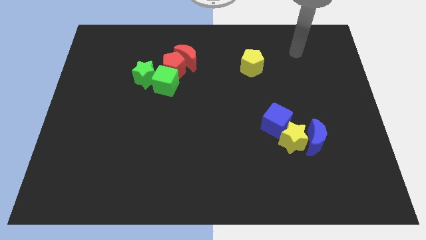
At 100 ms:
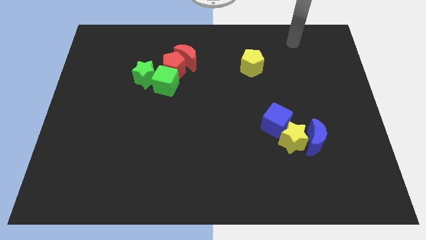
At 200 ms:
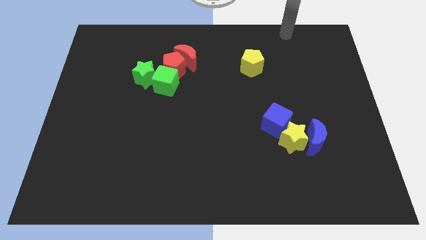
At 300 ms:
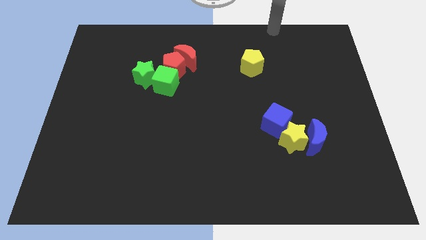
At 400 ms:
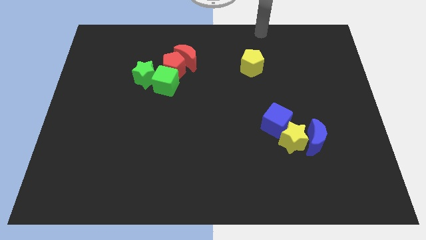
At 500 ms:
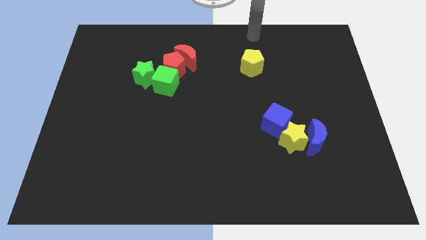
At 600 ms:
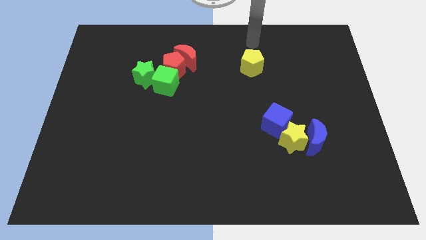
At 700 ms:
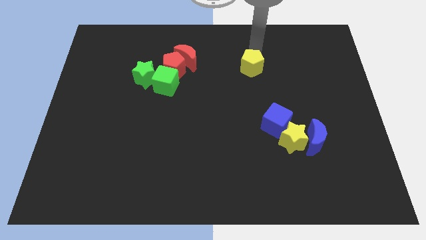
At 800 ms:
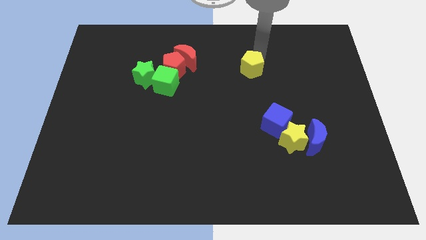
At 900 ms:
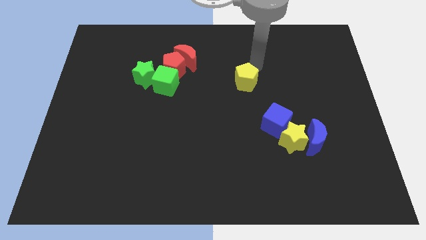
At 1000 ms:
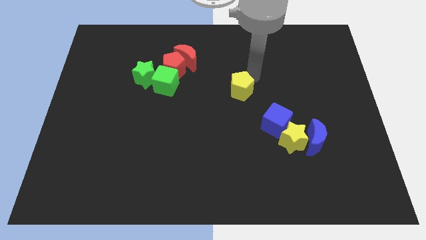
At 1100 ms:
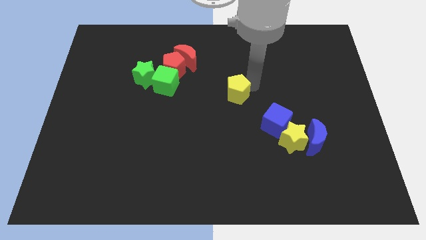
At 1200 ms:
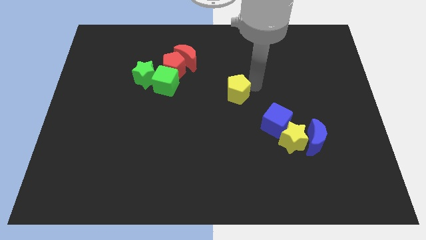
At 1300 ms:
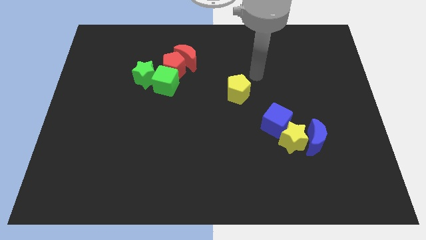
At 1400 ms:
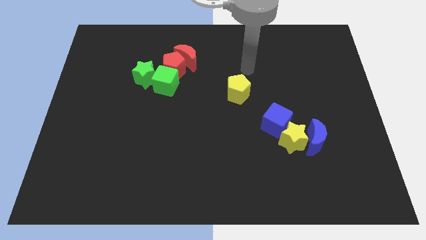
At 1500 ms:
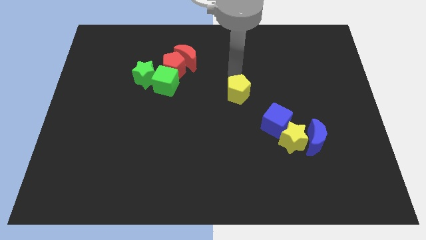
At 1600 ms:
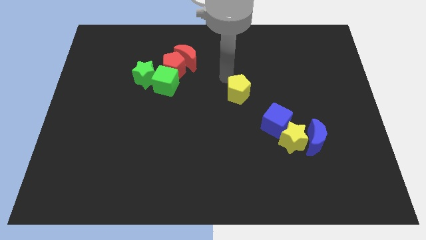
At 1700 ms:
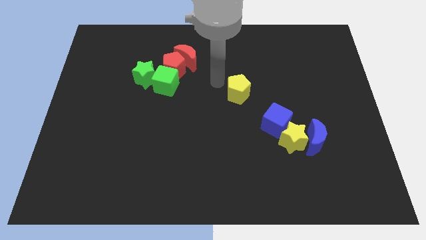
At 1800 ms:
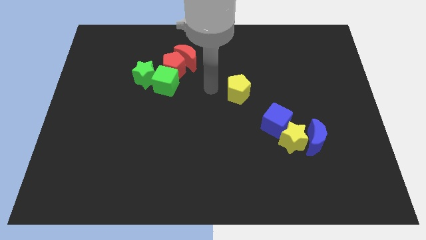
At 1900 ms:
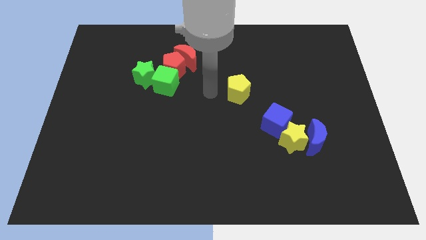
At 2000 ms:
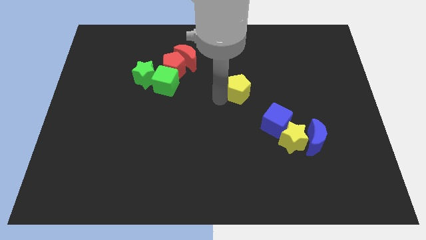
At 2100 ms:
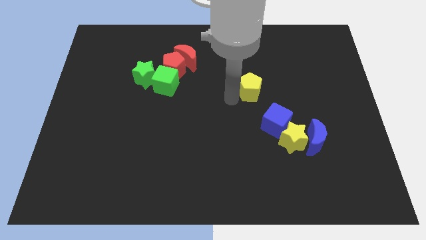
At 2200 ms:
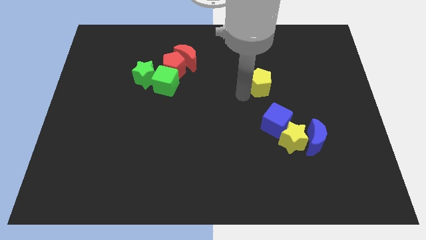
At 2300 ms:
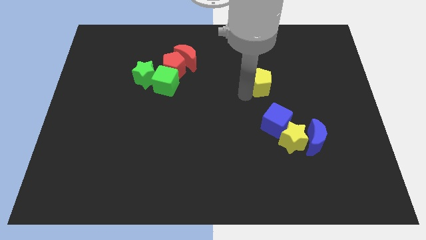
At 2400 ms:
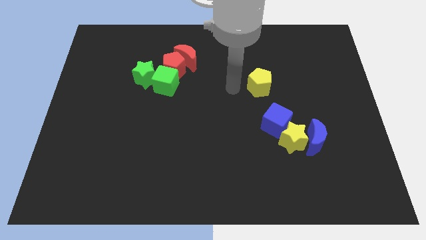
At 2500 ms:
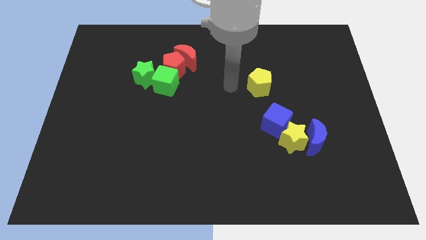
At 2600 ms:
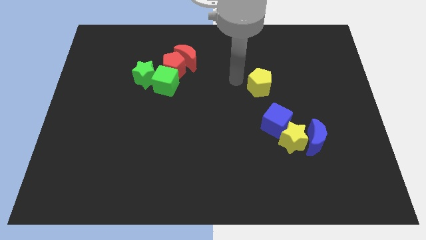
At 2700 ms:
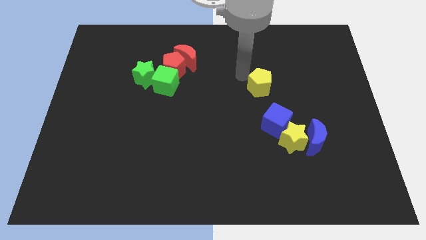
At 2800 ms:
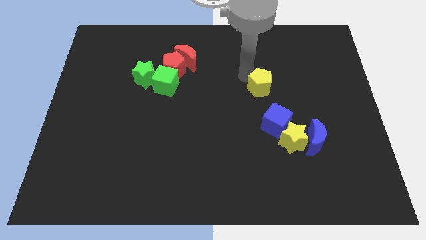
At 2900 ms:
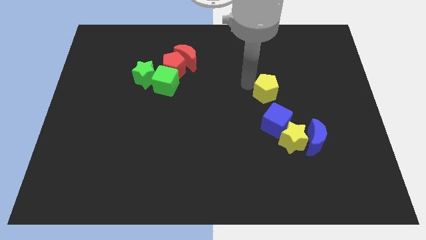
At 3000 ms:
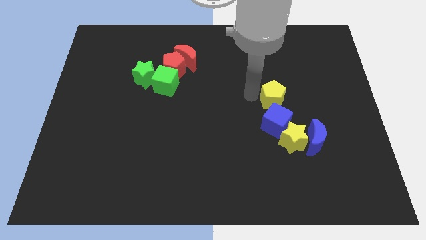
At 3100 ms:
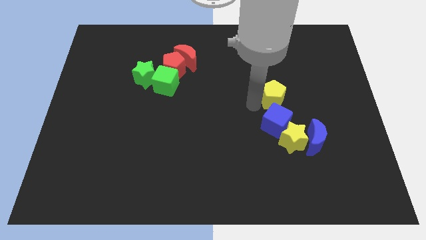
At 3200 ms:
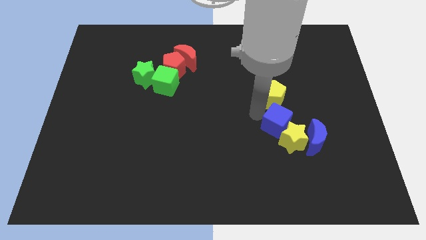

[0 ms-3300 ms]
move the yellow pentagon at the top of the blue cube

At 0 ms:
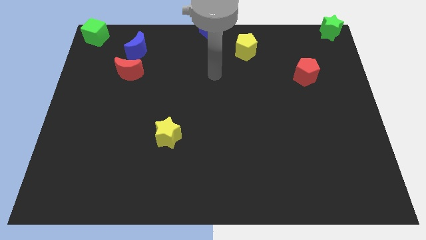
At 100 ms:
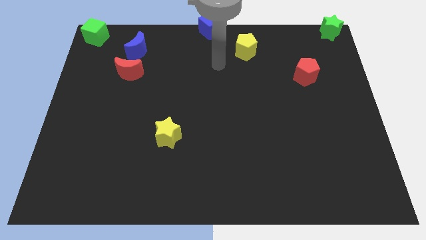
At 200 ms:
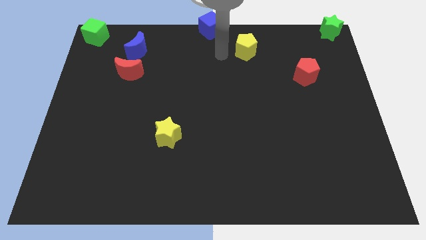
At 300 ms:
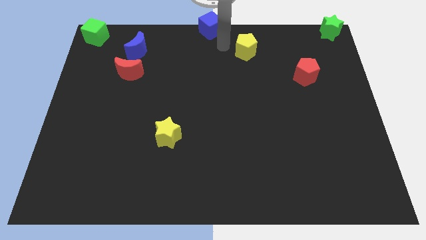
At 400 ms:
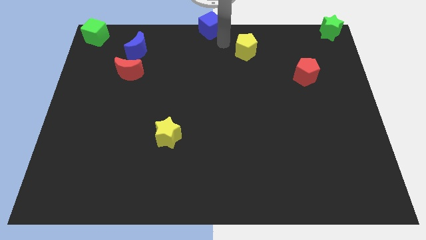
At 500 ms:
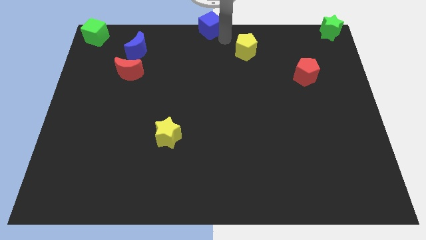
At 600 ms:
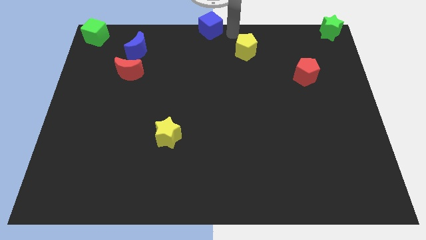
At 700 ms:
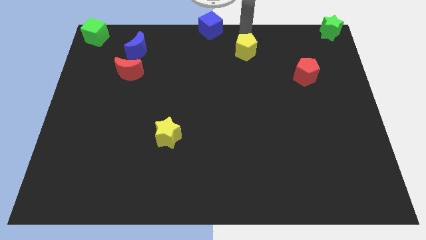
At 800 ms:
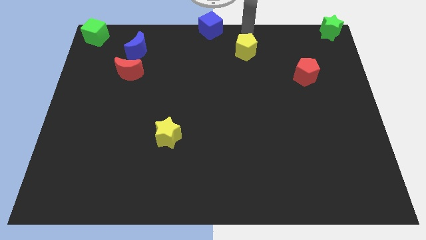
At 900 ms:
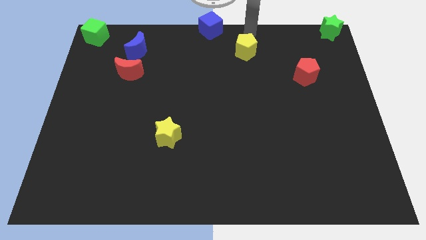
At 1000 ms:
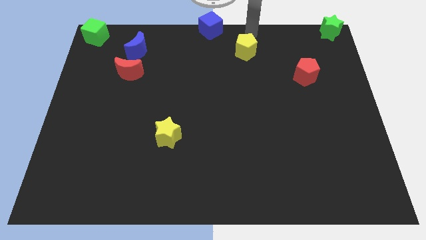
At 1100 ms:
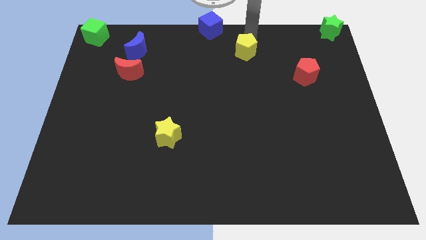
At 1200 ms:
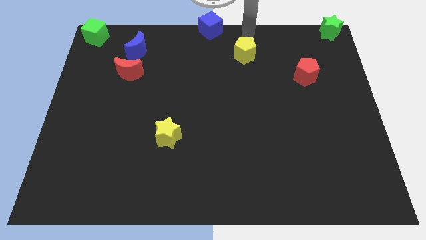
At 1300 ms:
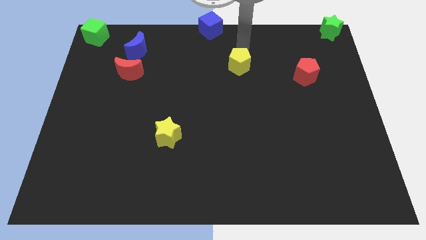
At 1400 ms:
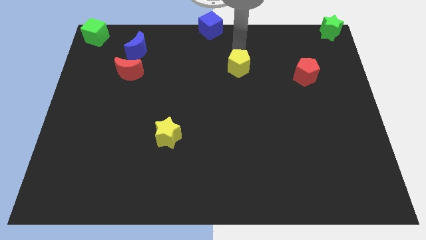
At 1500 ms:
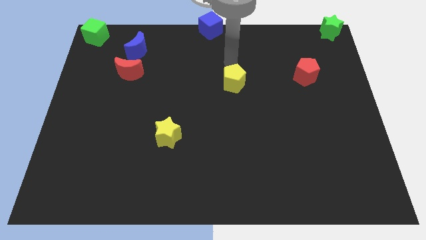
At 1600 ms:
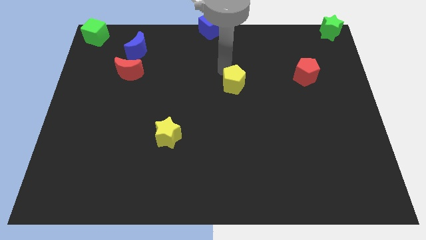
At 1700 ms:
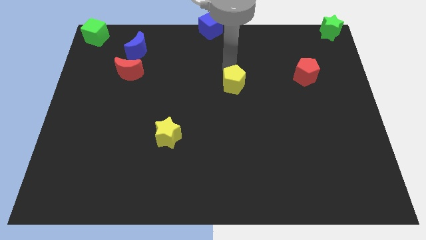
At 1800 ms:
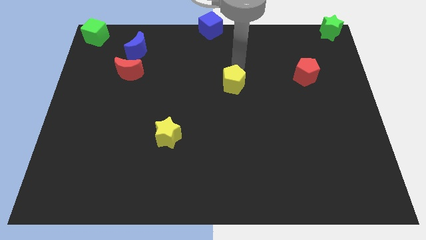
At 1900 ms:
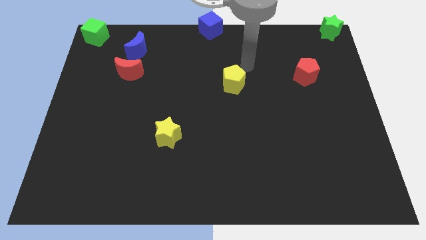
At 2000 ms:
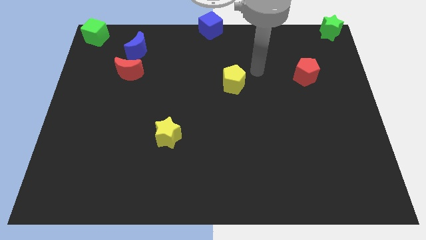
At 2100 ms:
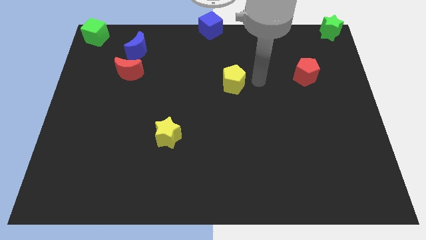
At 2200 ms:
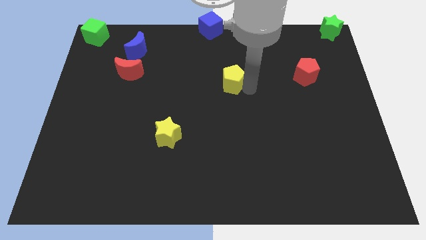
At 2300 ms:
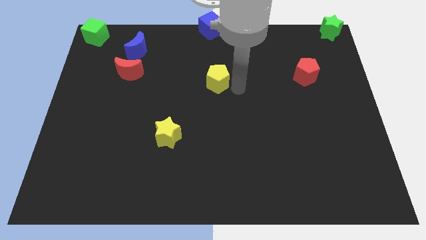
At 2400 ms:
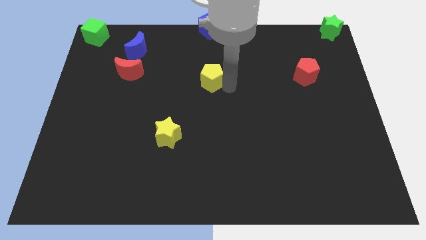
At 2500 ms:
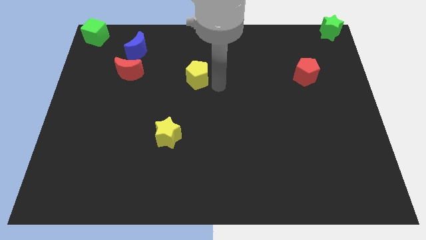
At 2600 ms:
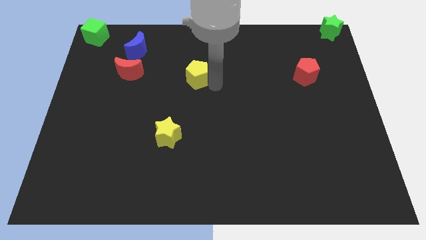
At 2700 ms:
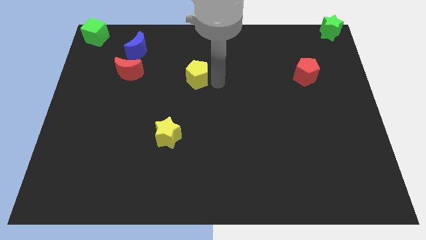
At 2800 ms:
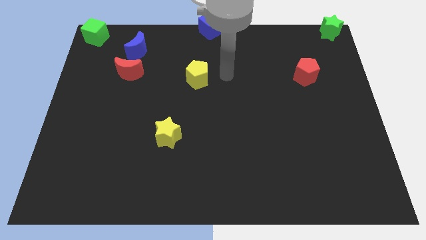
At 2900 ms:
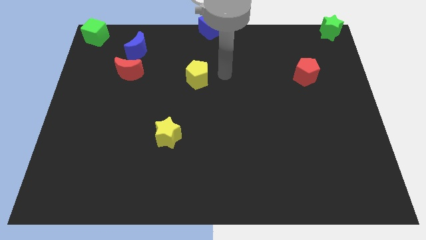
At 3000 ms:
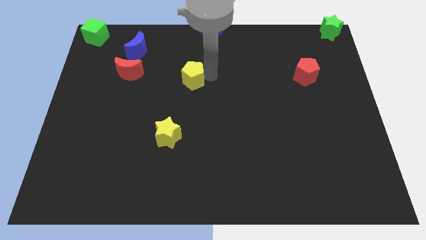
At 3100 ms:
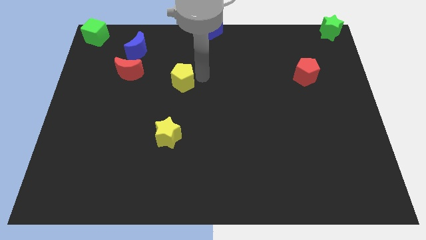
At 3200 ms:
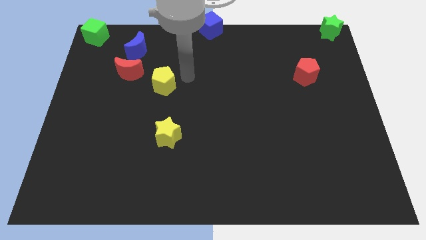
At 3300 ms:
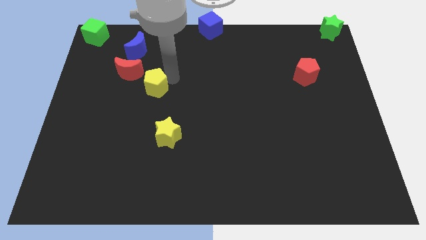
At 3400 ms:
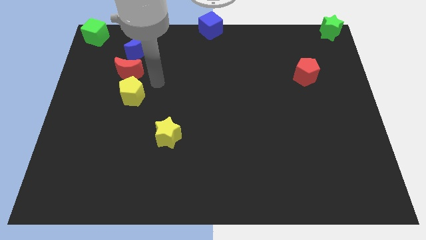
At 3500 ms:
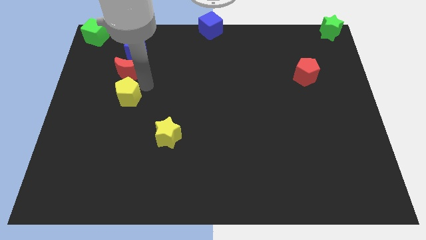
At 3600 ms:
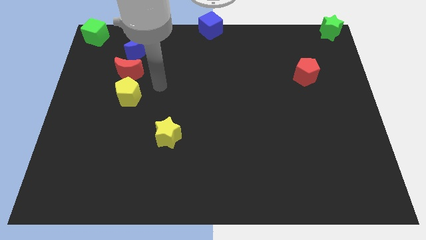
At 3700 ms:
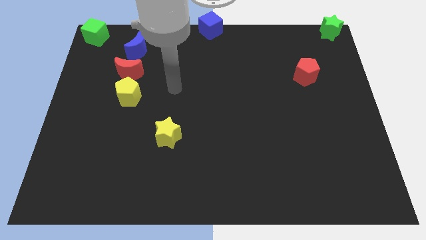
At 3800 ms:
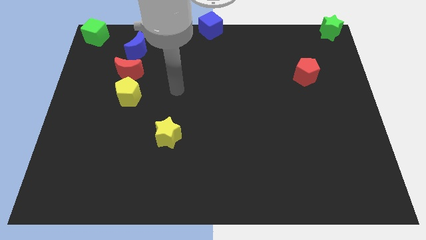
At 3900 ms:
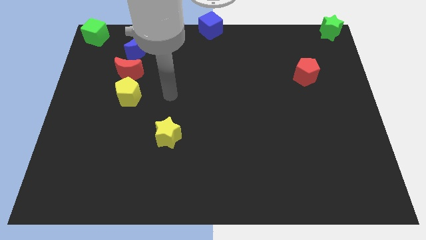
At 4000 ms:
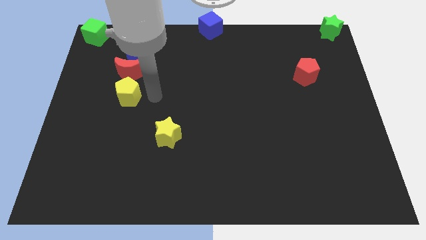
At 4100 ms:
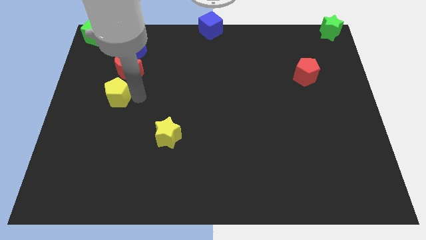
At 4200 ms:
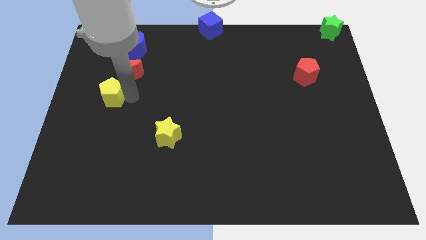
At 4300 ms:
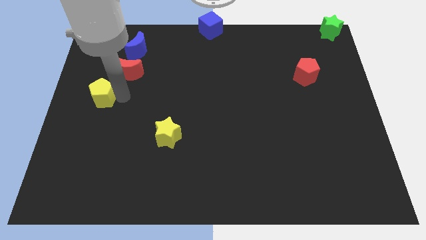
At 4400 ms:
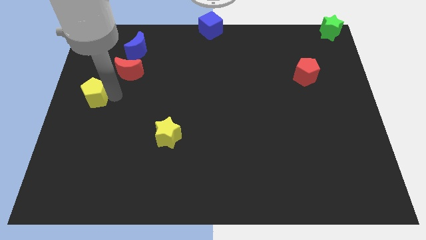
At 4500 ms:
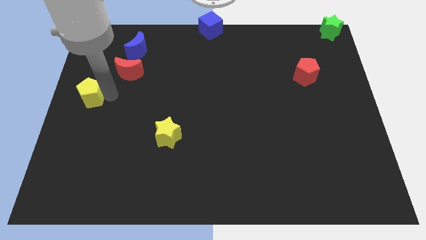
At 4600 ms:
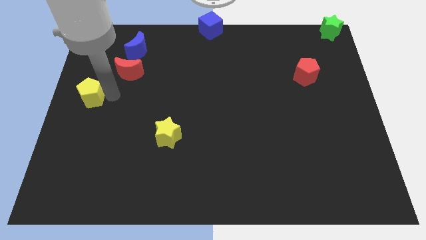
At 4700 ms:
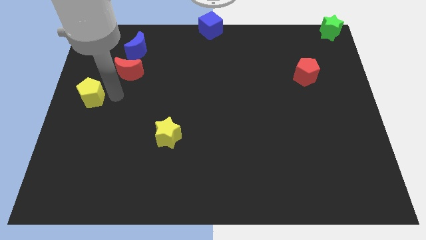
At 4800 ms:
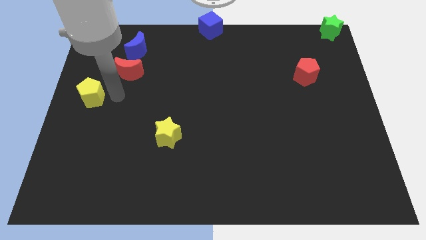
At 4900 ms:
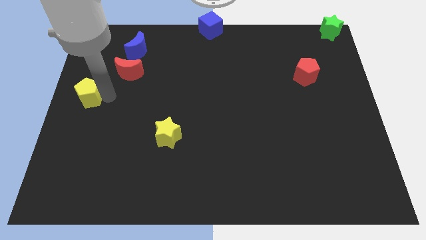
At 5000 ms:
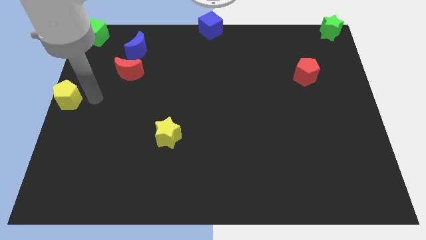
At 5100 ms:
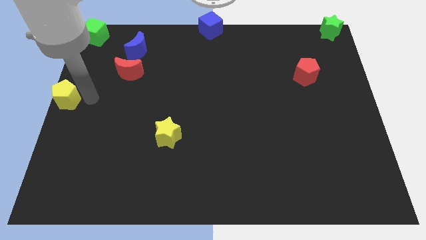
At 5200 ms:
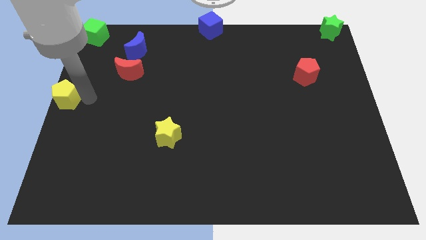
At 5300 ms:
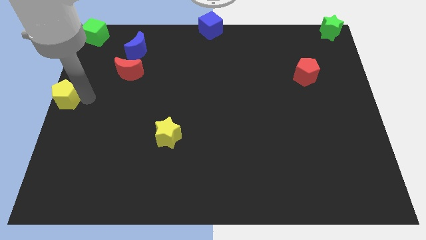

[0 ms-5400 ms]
move yellow pentagon to the left middle of the board

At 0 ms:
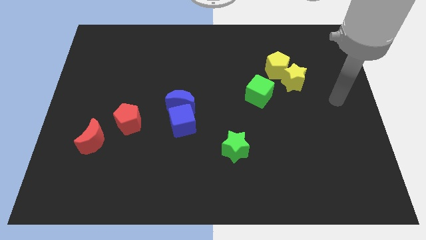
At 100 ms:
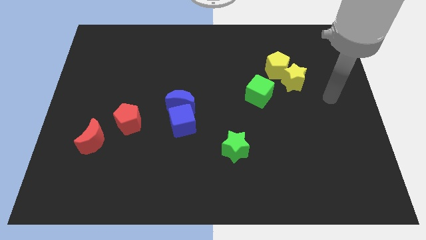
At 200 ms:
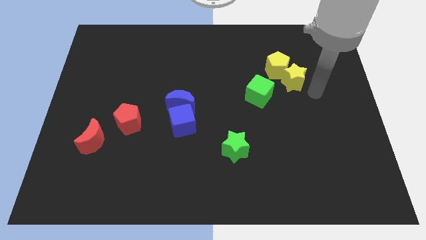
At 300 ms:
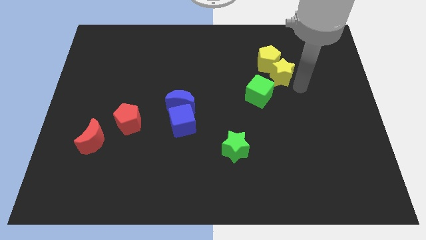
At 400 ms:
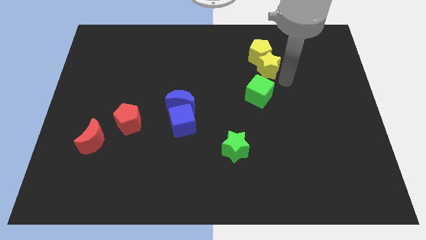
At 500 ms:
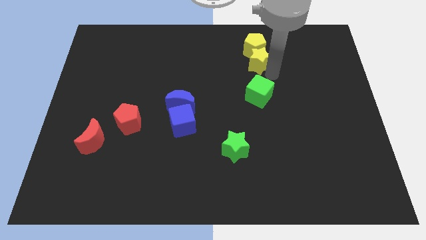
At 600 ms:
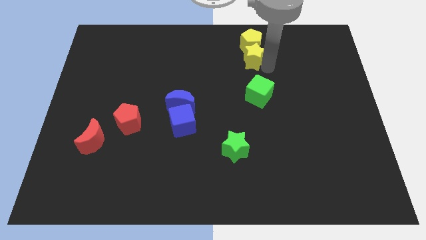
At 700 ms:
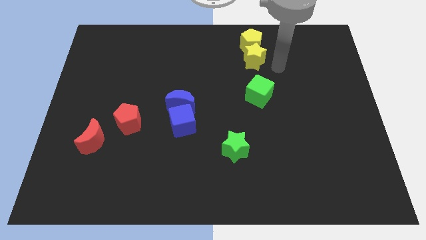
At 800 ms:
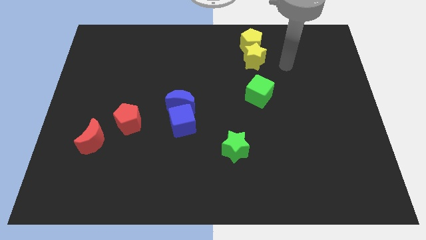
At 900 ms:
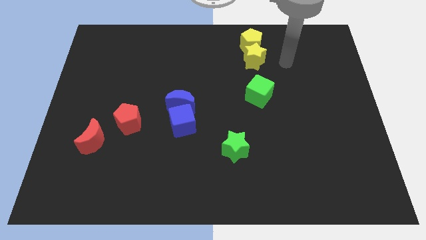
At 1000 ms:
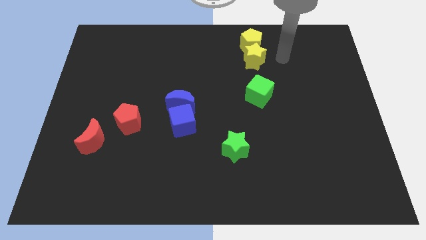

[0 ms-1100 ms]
place the yellow blocks at the top of green cube
